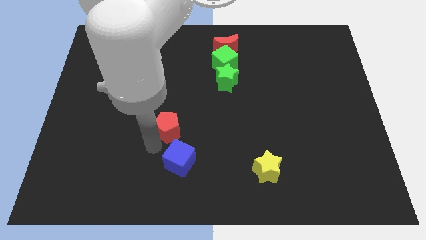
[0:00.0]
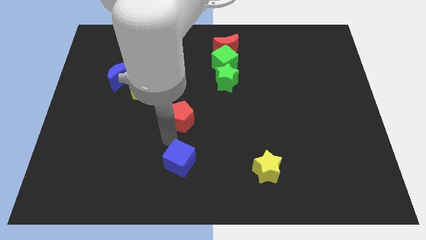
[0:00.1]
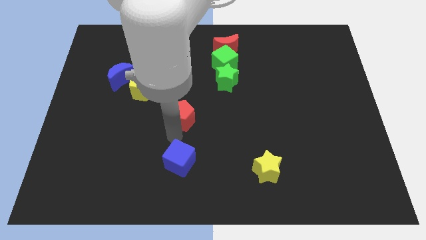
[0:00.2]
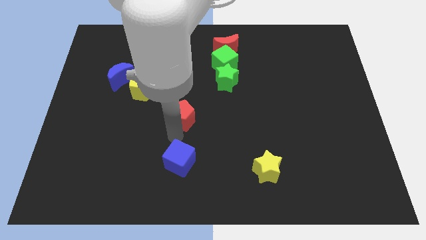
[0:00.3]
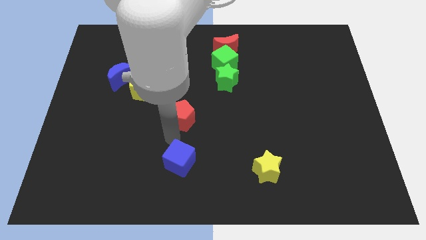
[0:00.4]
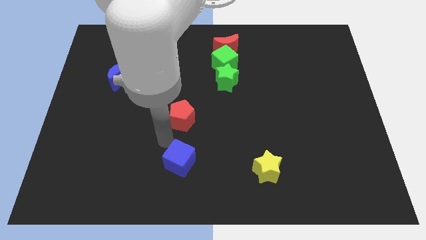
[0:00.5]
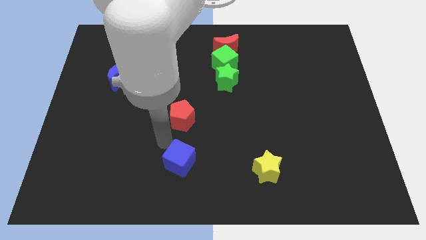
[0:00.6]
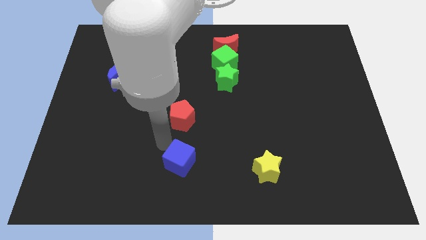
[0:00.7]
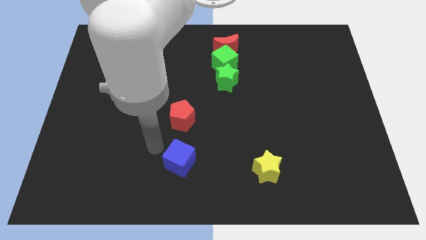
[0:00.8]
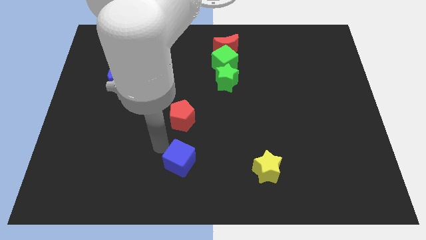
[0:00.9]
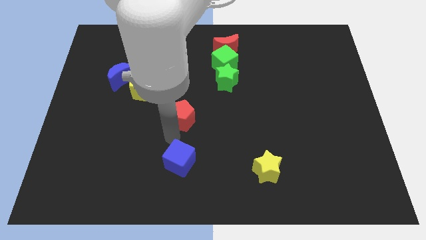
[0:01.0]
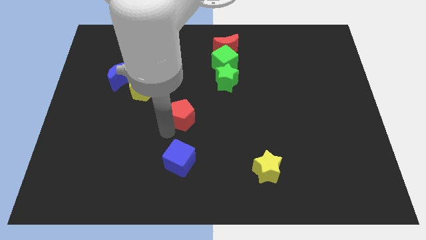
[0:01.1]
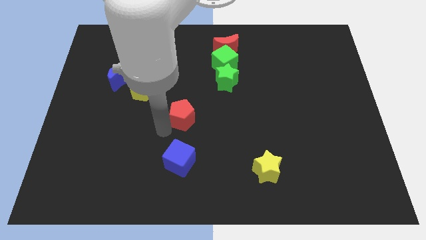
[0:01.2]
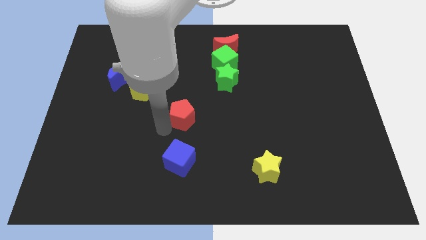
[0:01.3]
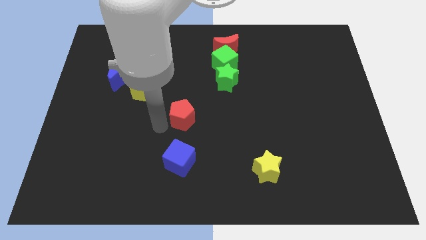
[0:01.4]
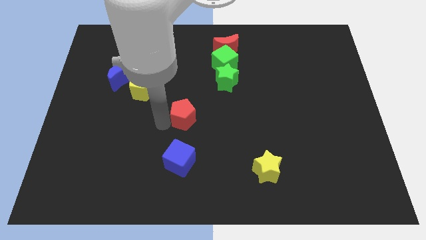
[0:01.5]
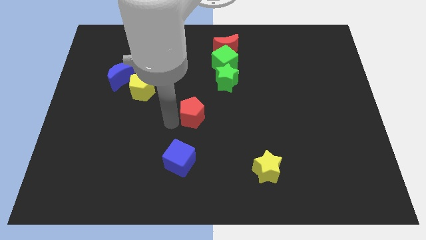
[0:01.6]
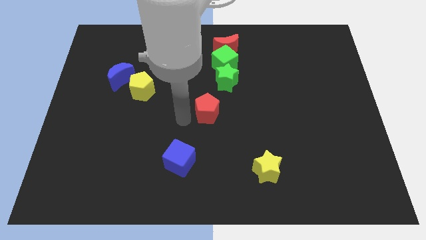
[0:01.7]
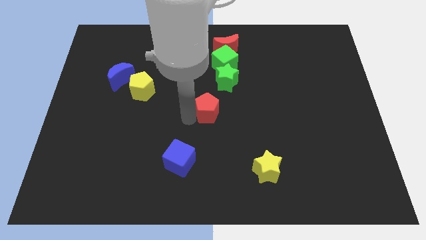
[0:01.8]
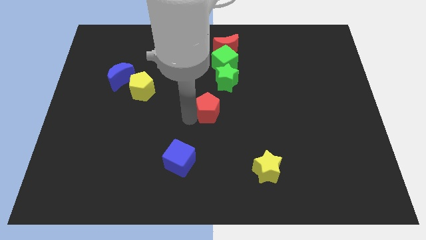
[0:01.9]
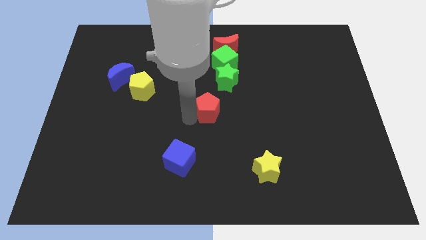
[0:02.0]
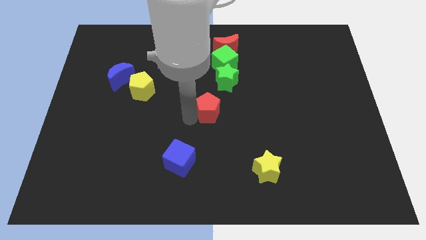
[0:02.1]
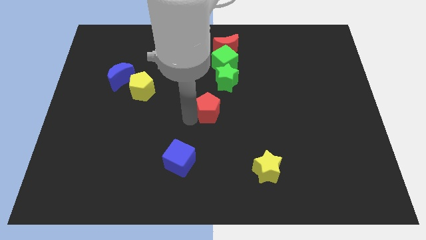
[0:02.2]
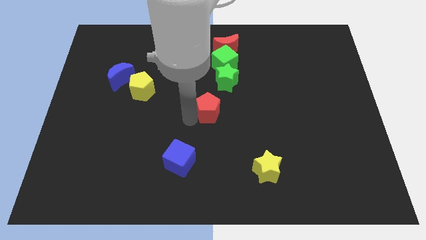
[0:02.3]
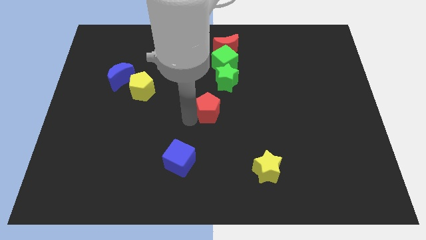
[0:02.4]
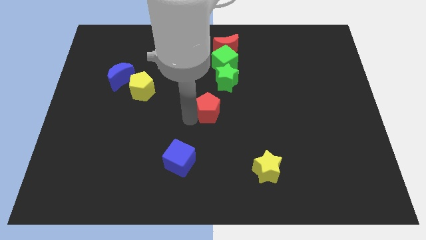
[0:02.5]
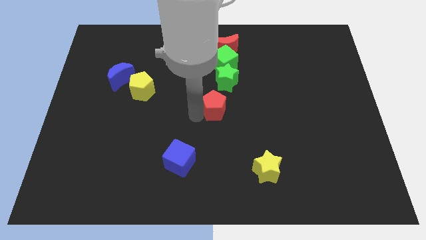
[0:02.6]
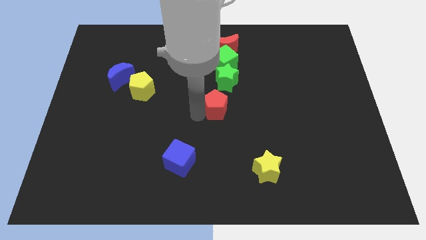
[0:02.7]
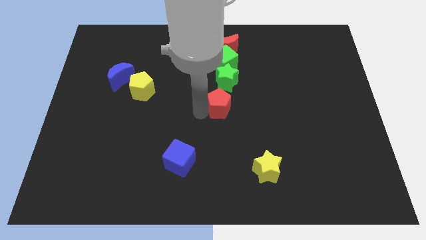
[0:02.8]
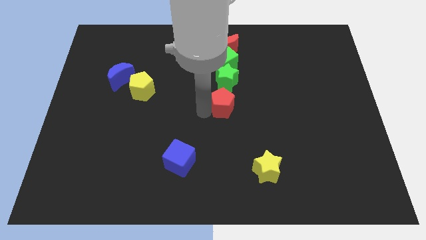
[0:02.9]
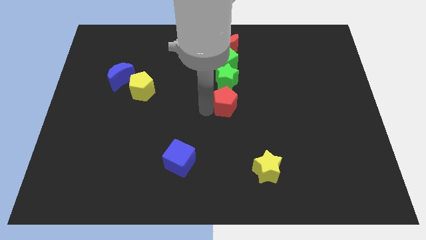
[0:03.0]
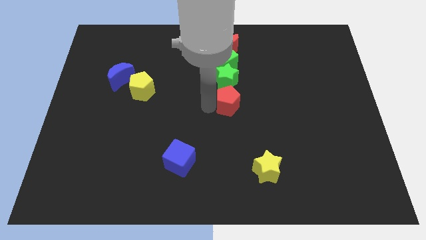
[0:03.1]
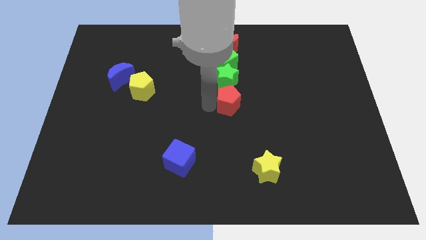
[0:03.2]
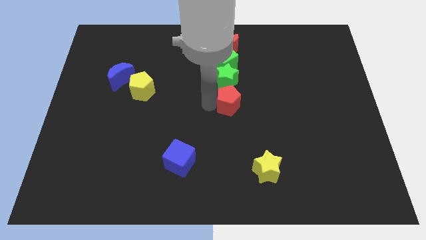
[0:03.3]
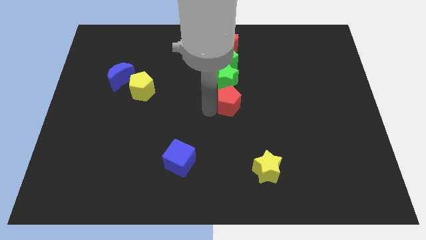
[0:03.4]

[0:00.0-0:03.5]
place the red pentagon below the green star

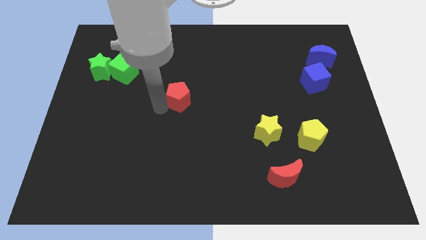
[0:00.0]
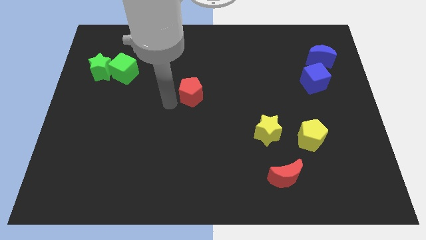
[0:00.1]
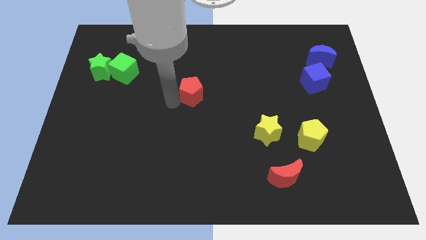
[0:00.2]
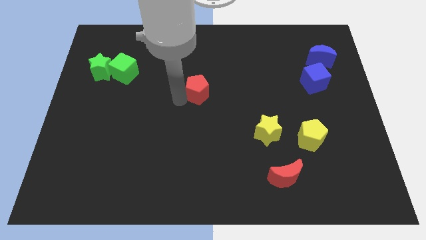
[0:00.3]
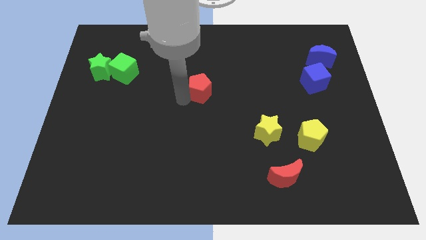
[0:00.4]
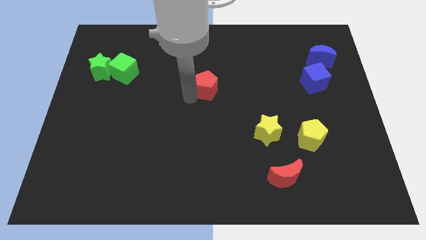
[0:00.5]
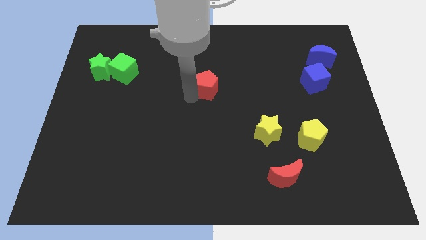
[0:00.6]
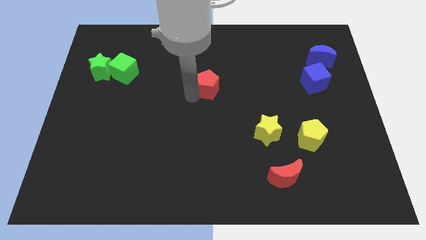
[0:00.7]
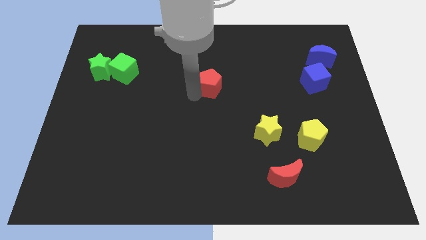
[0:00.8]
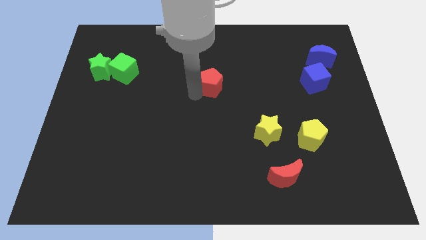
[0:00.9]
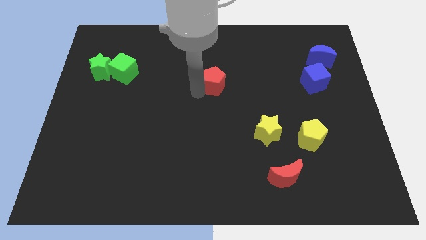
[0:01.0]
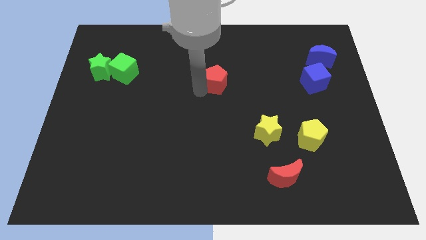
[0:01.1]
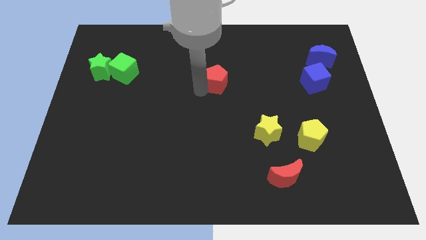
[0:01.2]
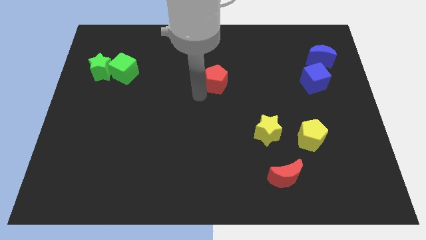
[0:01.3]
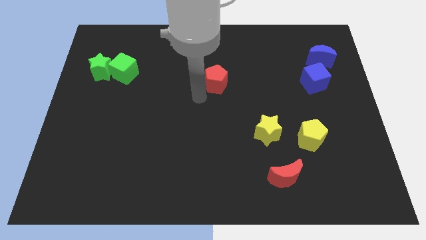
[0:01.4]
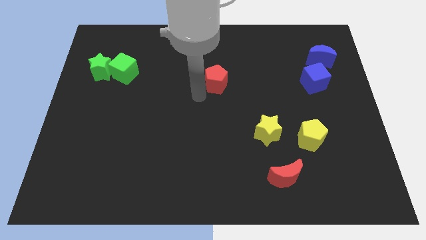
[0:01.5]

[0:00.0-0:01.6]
place the red pentagon left to the blue cube

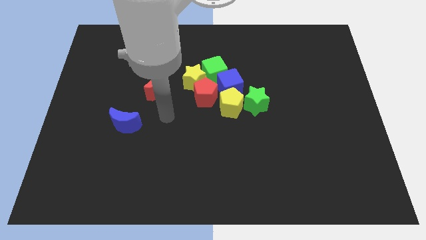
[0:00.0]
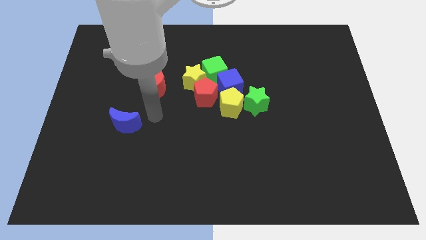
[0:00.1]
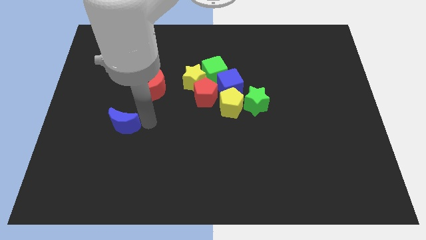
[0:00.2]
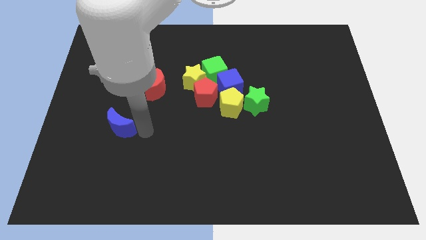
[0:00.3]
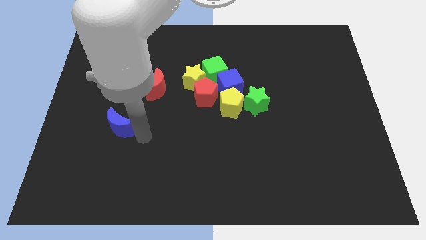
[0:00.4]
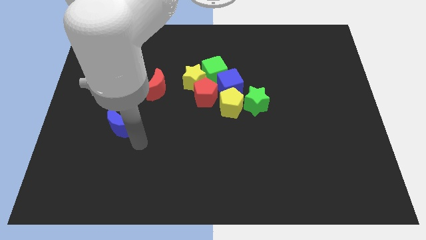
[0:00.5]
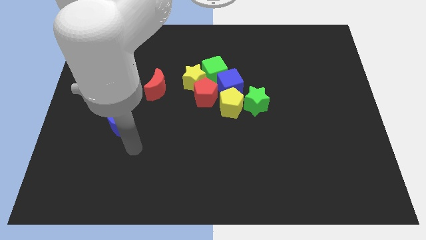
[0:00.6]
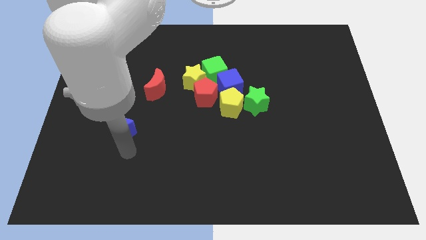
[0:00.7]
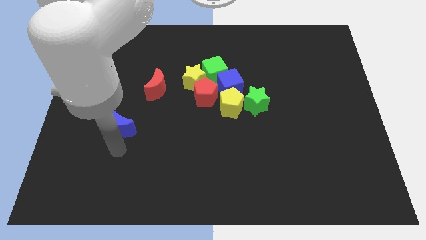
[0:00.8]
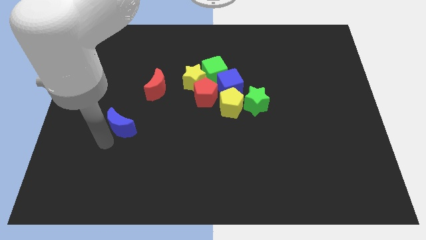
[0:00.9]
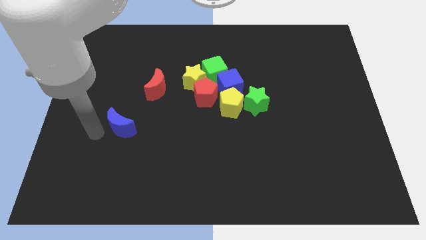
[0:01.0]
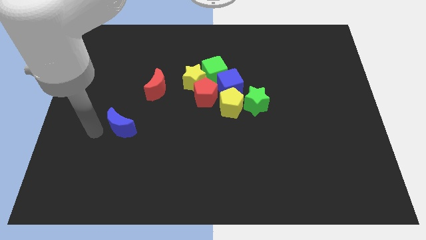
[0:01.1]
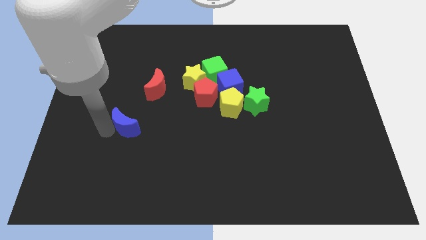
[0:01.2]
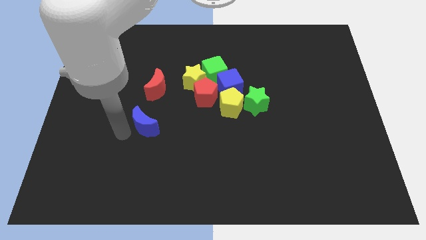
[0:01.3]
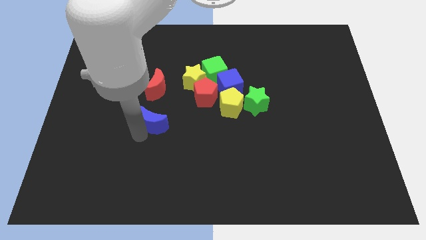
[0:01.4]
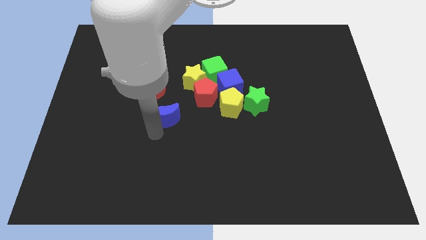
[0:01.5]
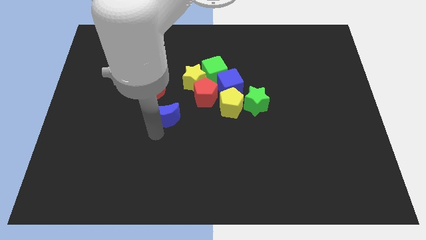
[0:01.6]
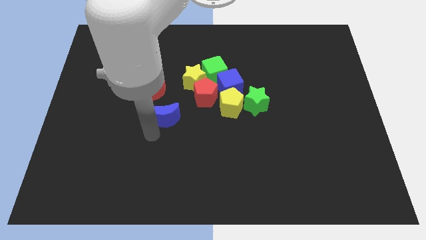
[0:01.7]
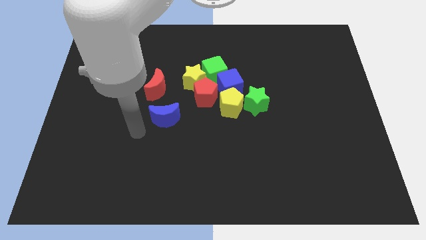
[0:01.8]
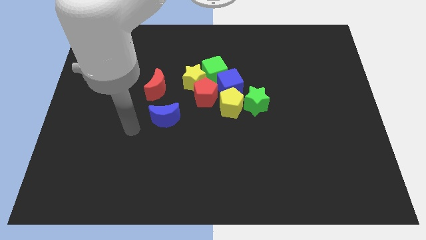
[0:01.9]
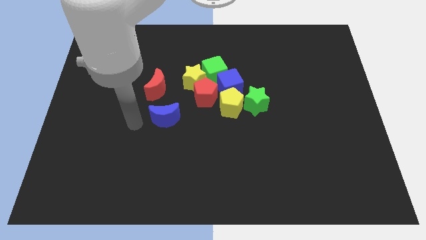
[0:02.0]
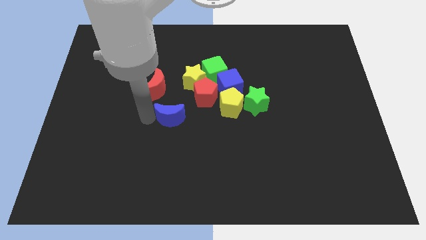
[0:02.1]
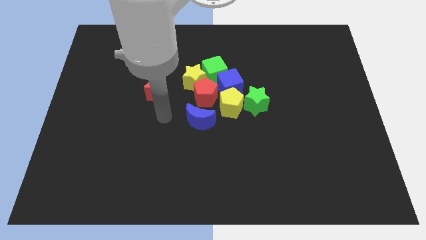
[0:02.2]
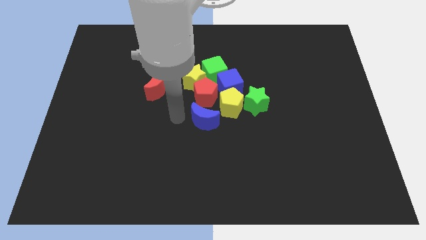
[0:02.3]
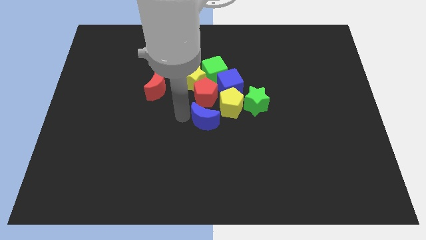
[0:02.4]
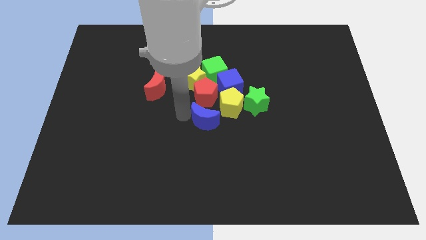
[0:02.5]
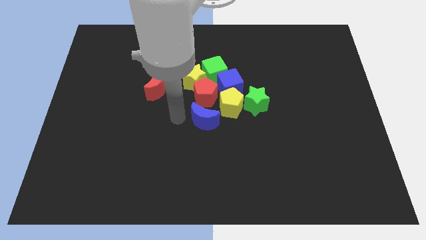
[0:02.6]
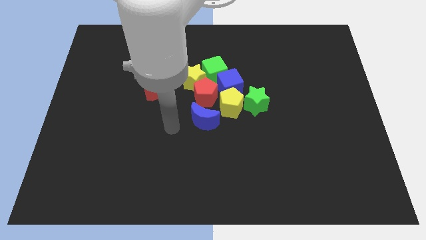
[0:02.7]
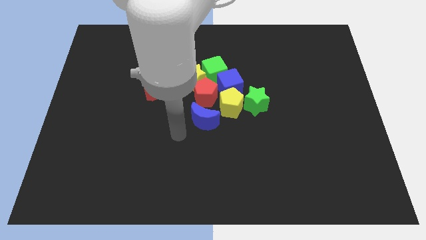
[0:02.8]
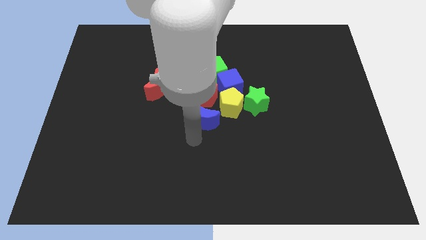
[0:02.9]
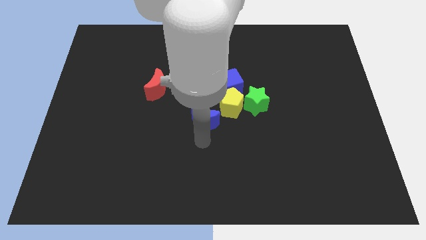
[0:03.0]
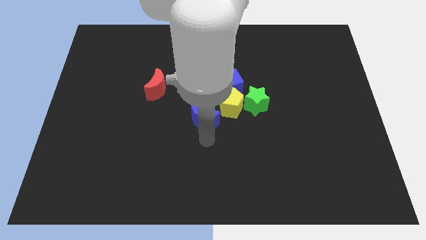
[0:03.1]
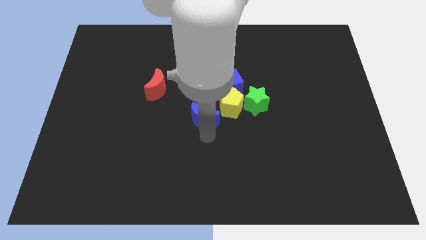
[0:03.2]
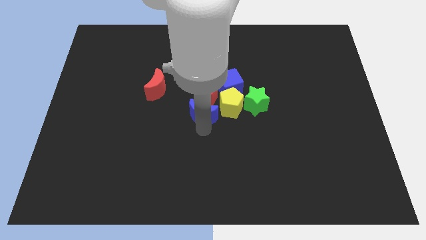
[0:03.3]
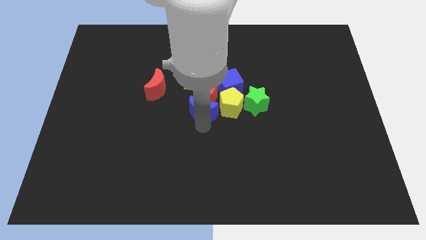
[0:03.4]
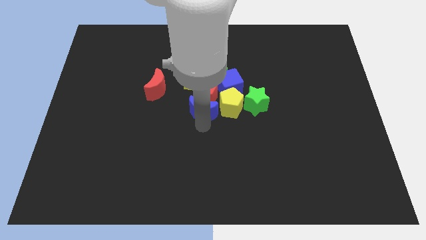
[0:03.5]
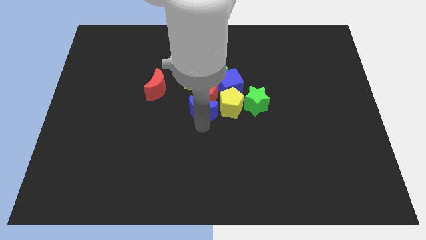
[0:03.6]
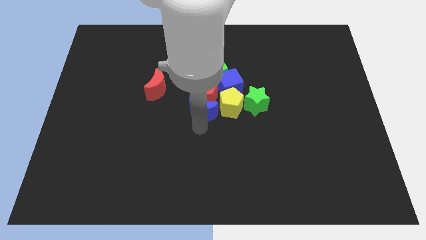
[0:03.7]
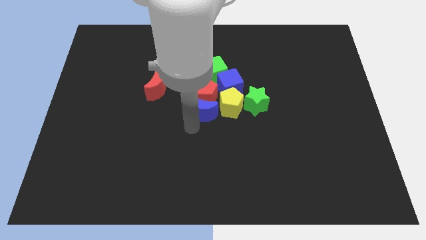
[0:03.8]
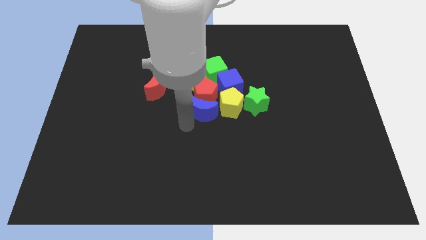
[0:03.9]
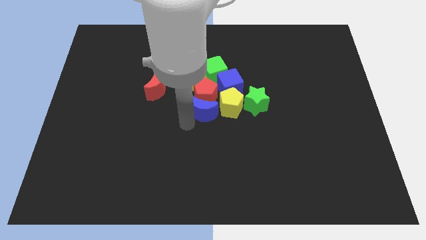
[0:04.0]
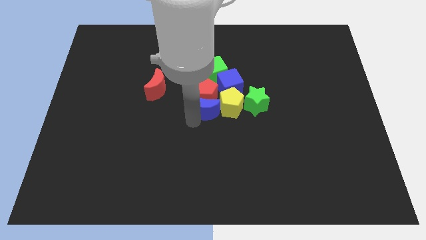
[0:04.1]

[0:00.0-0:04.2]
move the blue moon to the bottom of the red pentagon
